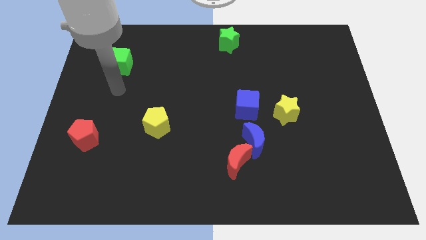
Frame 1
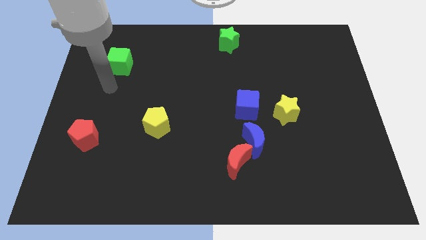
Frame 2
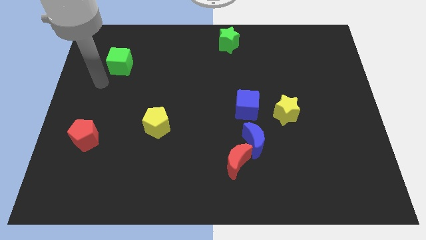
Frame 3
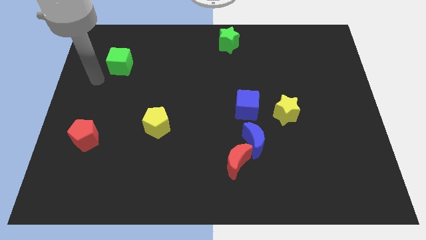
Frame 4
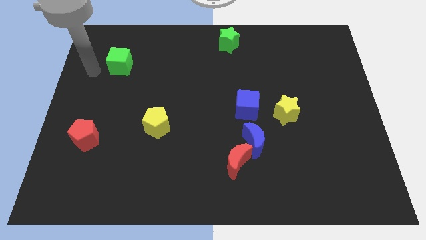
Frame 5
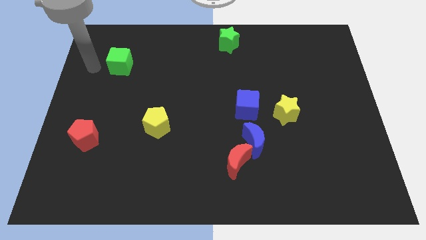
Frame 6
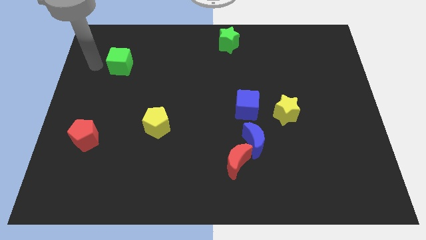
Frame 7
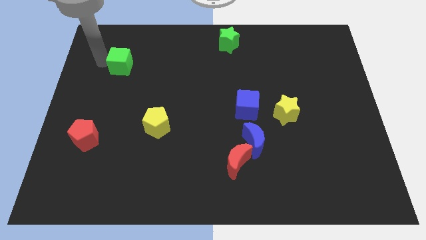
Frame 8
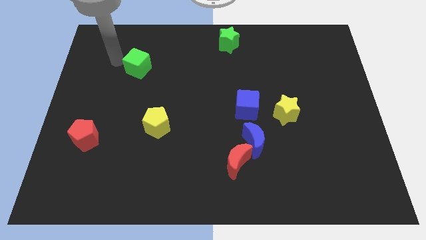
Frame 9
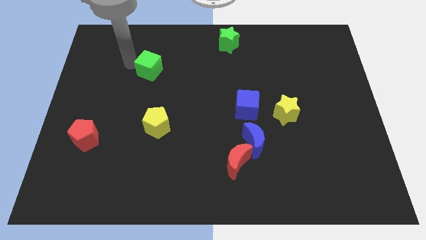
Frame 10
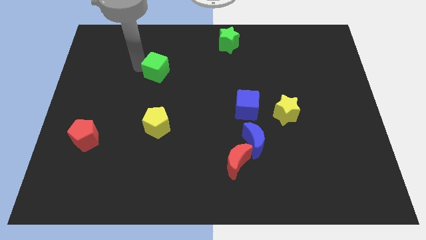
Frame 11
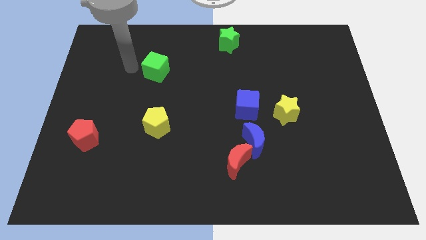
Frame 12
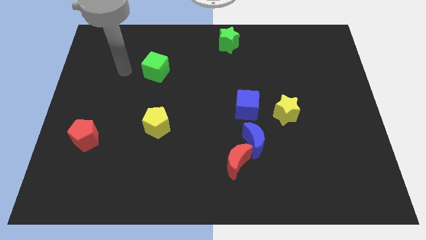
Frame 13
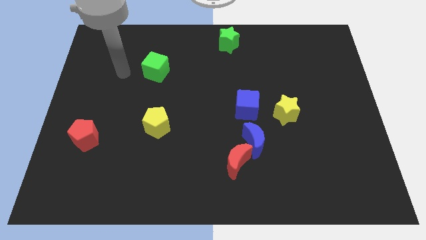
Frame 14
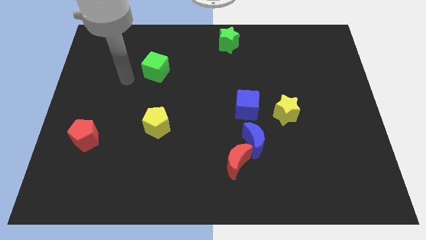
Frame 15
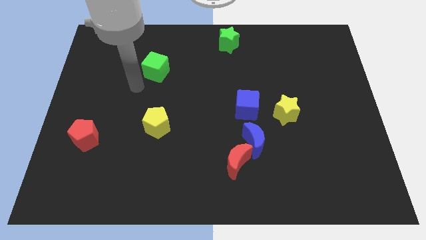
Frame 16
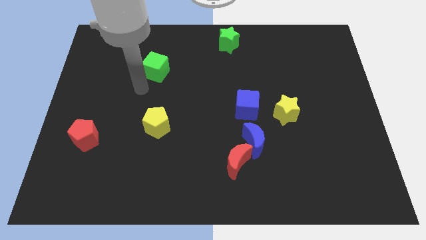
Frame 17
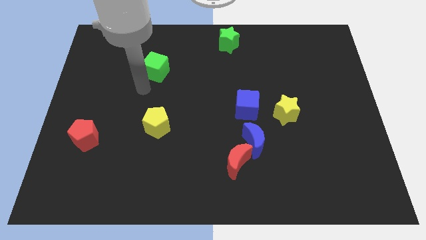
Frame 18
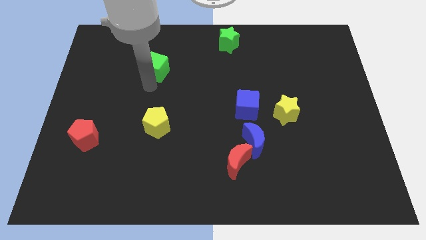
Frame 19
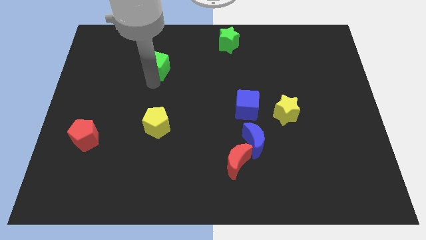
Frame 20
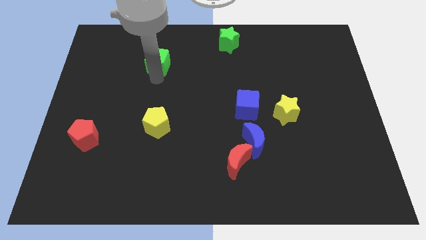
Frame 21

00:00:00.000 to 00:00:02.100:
slide green cube above the yellow pentagon

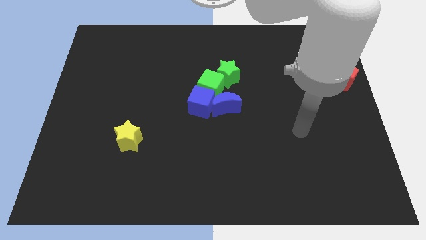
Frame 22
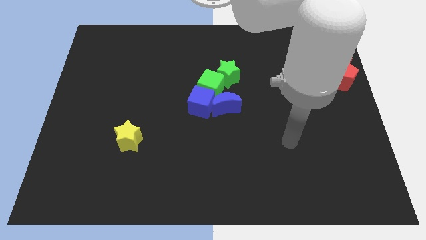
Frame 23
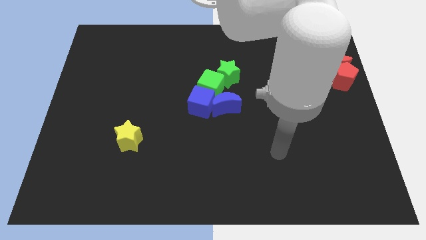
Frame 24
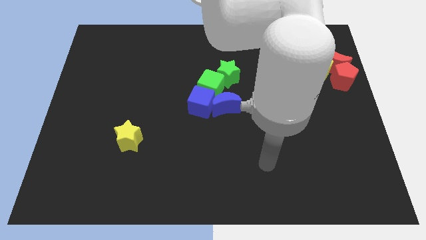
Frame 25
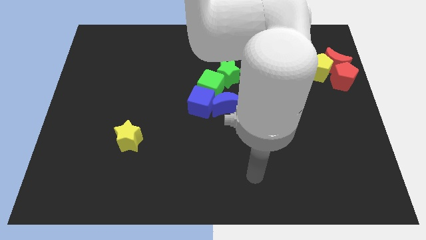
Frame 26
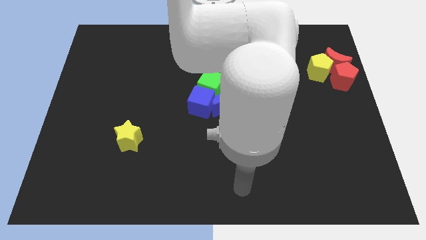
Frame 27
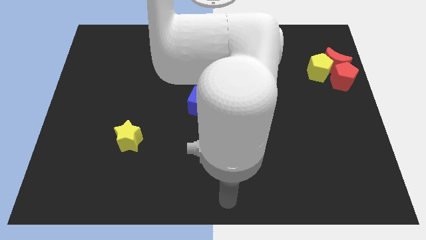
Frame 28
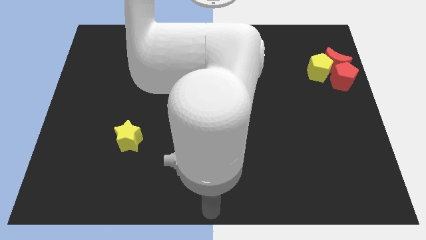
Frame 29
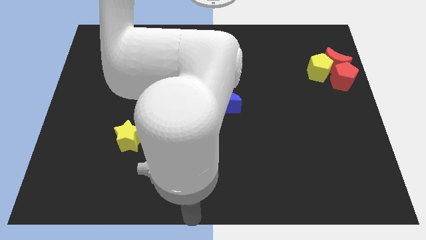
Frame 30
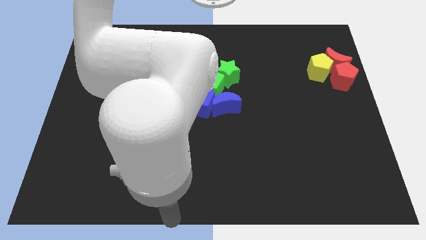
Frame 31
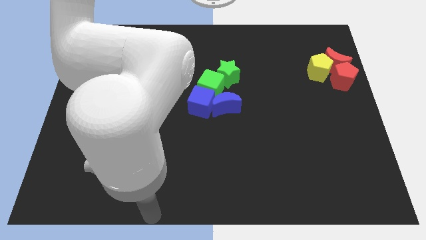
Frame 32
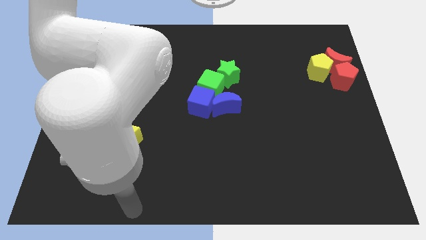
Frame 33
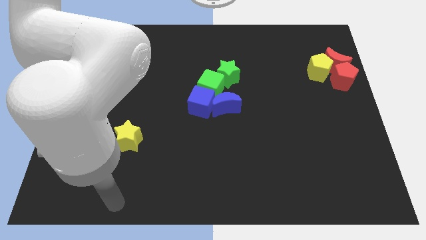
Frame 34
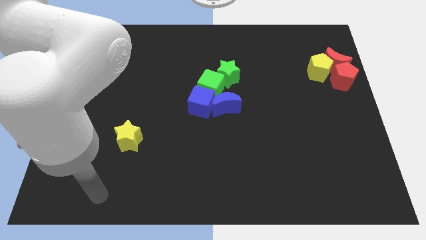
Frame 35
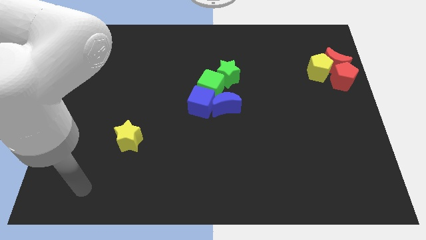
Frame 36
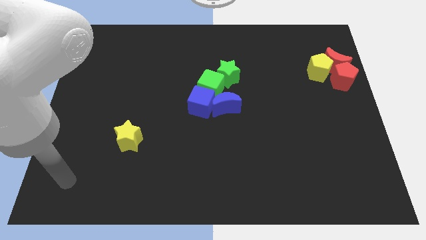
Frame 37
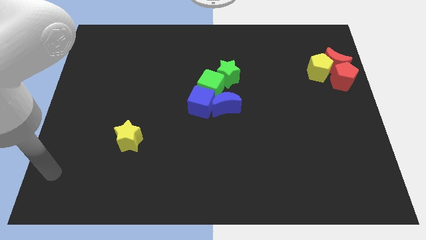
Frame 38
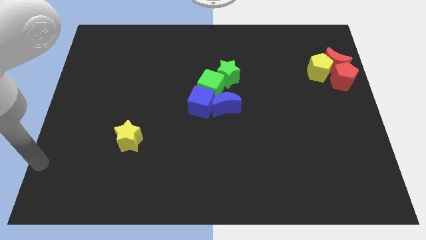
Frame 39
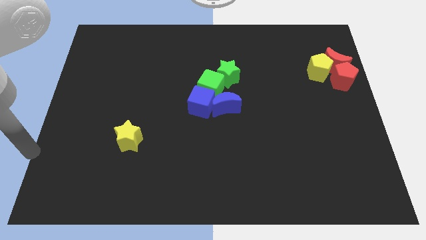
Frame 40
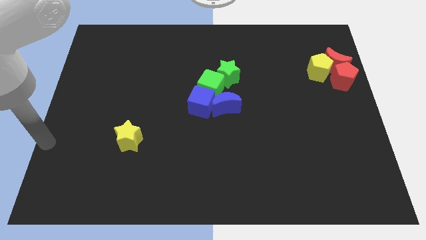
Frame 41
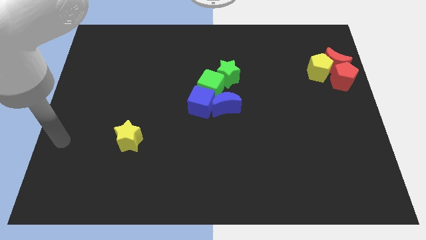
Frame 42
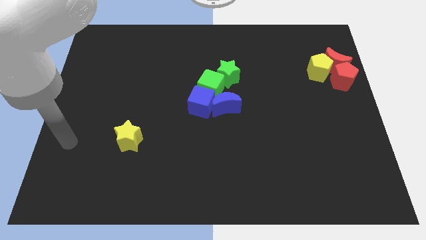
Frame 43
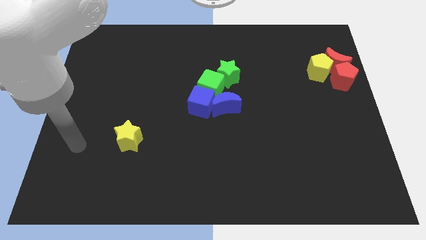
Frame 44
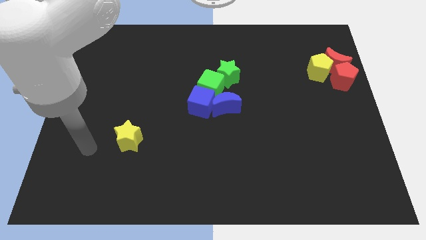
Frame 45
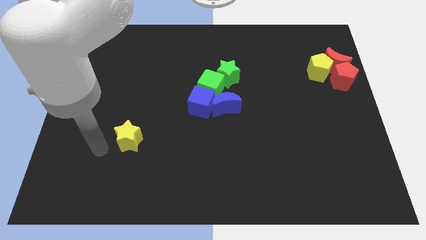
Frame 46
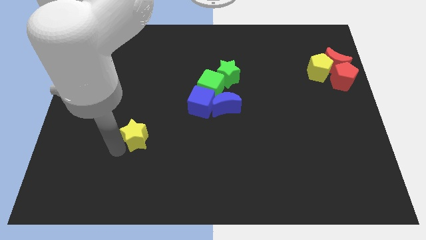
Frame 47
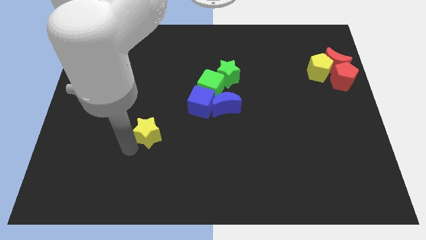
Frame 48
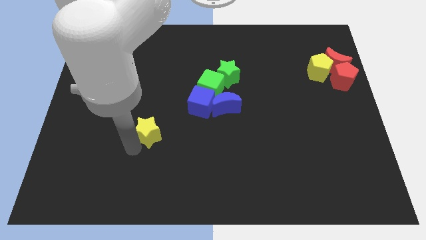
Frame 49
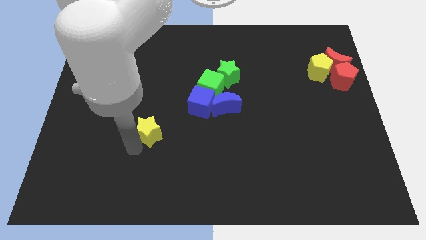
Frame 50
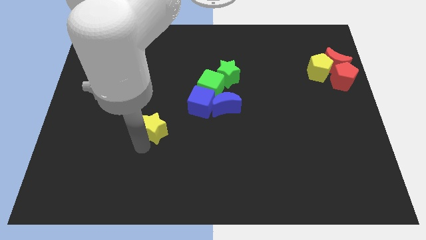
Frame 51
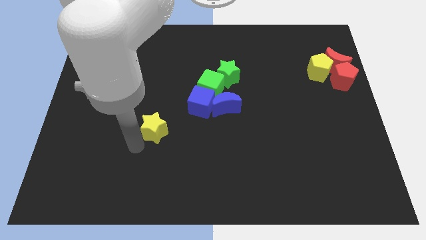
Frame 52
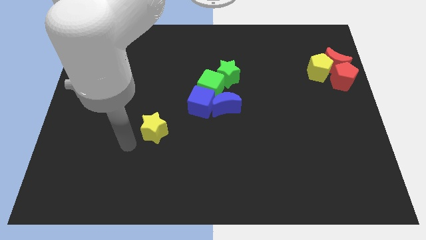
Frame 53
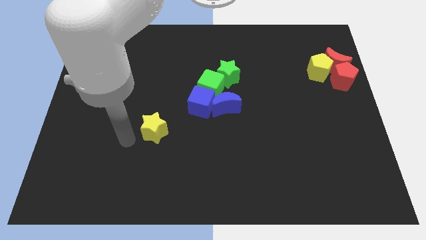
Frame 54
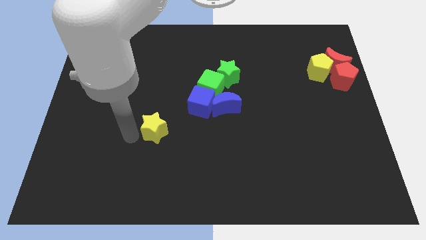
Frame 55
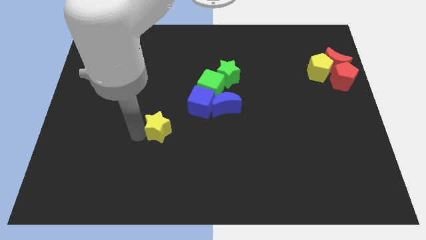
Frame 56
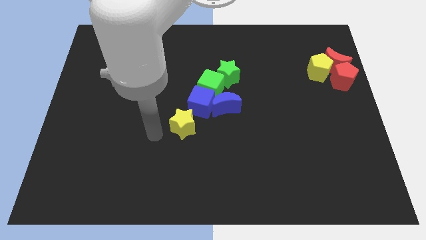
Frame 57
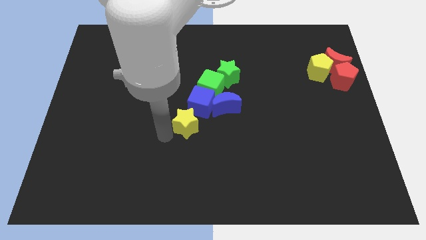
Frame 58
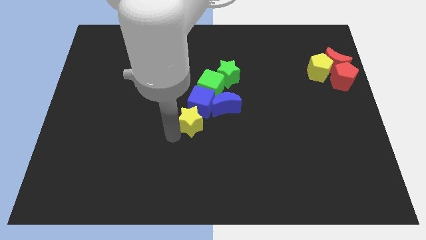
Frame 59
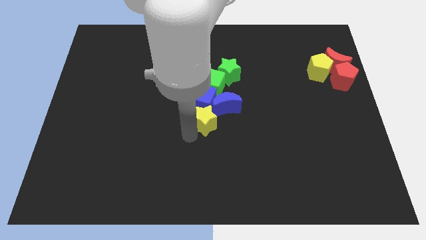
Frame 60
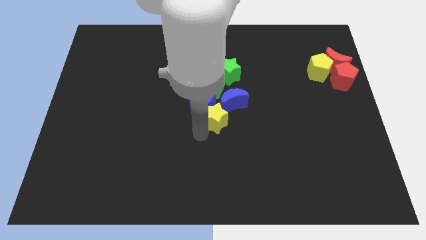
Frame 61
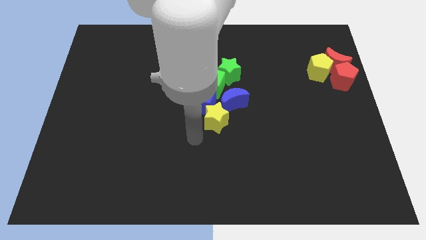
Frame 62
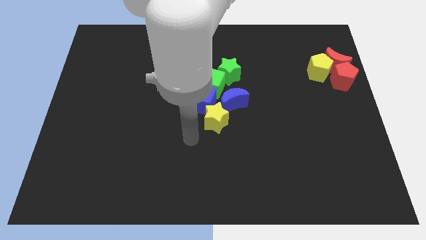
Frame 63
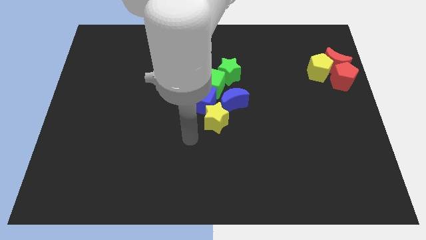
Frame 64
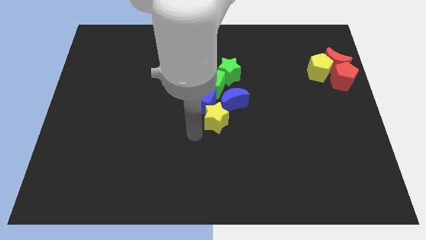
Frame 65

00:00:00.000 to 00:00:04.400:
push the yellow star into the blue crescent

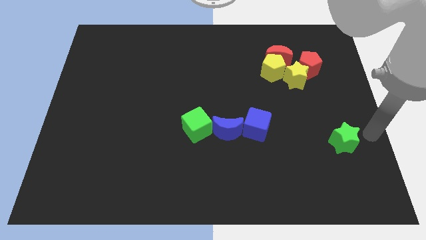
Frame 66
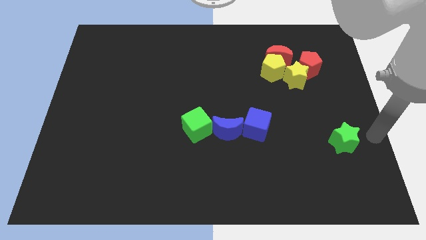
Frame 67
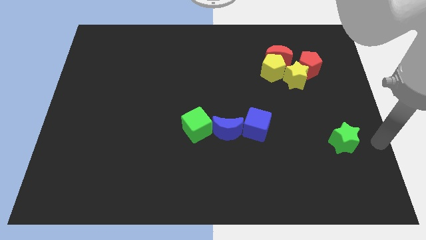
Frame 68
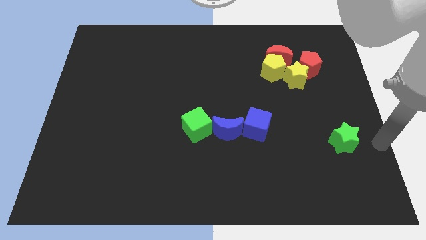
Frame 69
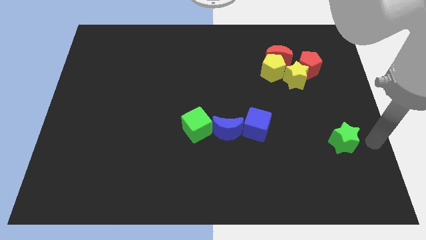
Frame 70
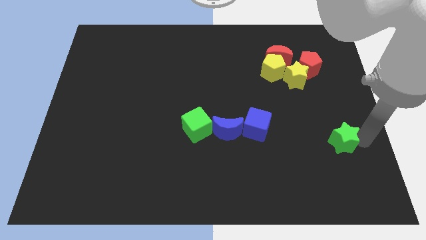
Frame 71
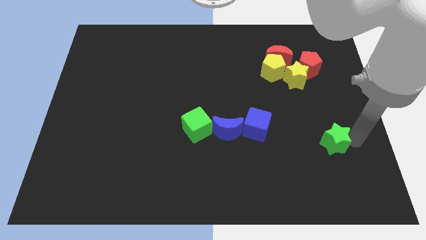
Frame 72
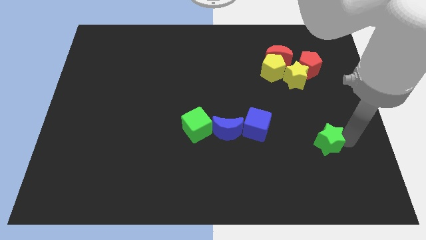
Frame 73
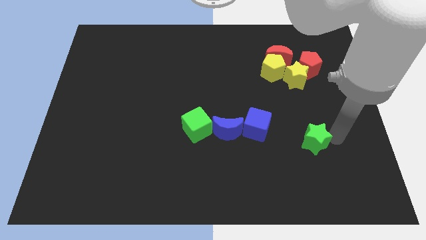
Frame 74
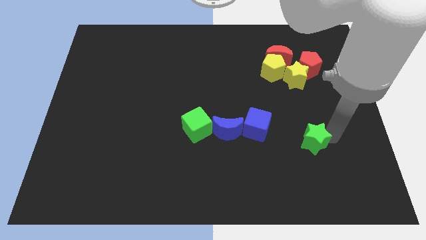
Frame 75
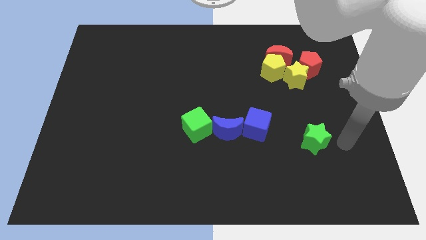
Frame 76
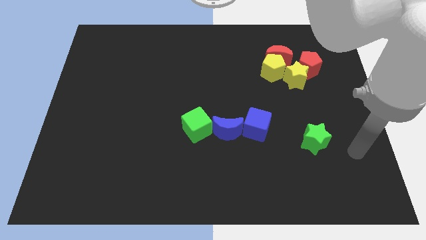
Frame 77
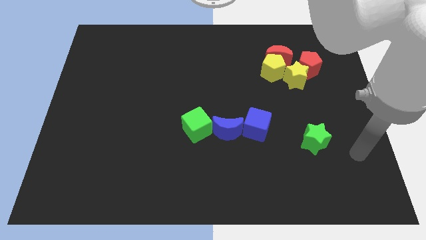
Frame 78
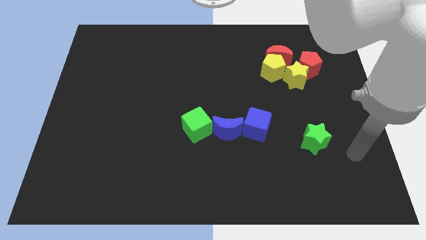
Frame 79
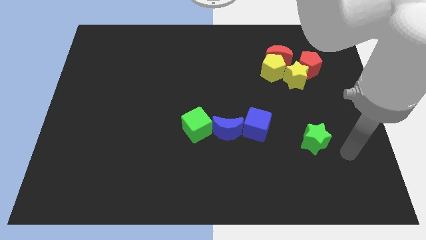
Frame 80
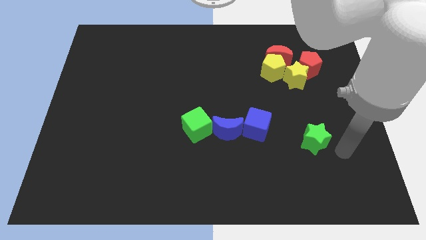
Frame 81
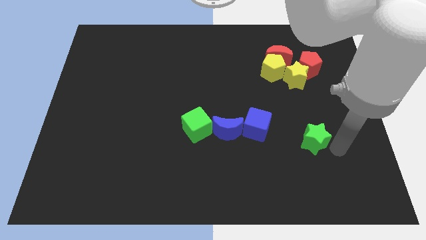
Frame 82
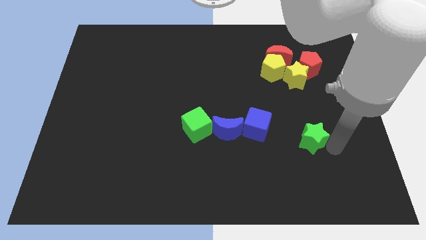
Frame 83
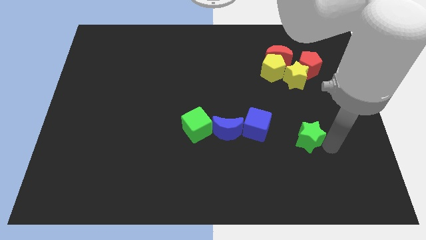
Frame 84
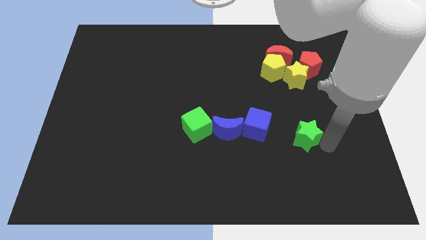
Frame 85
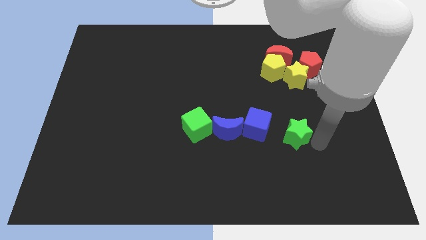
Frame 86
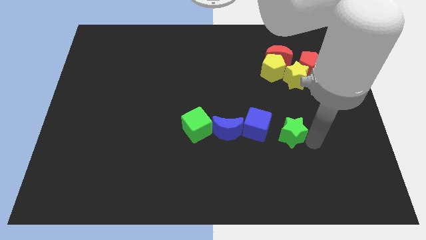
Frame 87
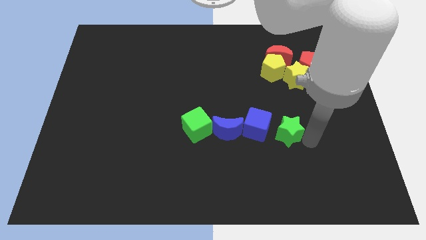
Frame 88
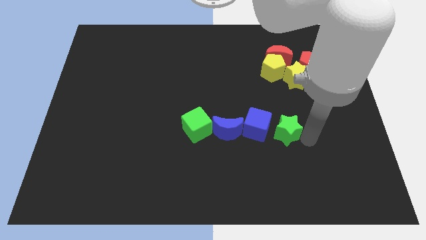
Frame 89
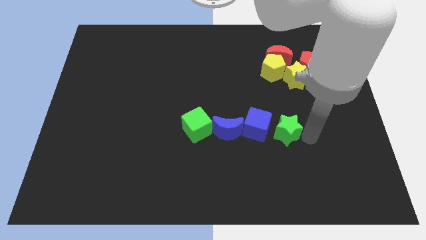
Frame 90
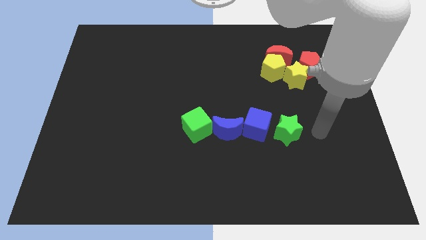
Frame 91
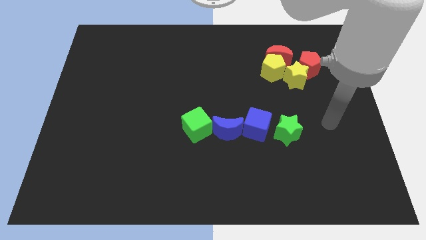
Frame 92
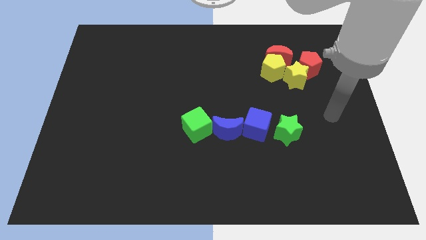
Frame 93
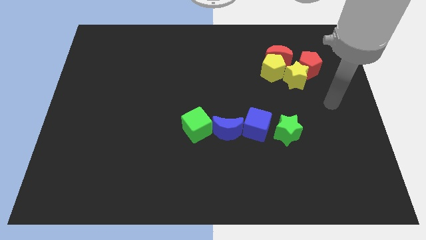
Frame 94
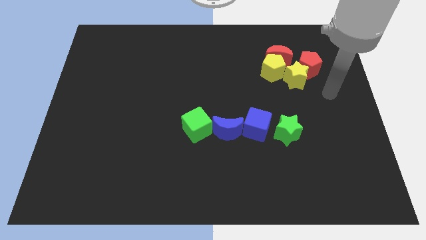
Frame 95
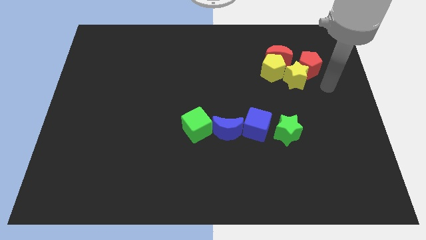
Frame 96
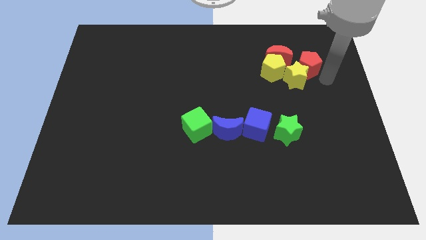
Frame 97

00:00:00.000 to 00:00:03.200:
move the green star right to the blue cube
